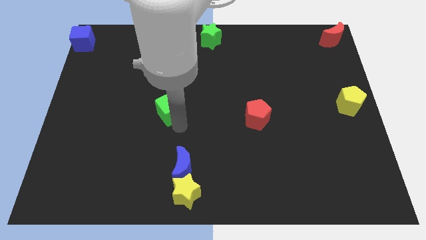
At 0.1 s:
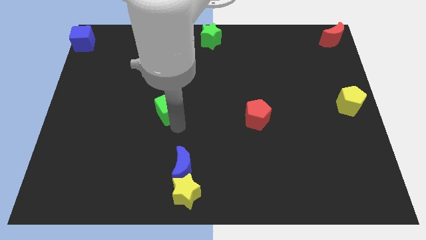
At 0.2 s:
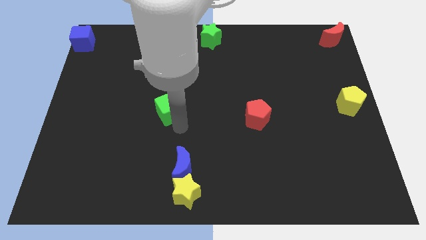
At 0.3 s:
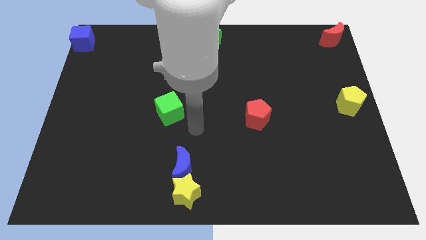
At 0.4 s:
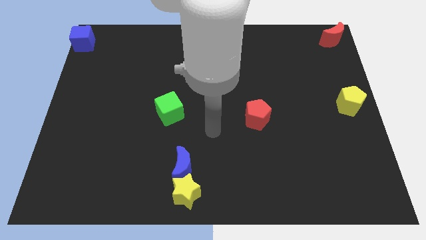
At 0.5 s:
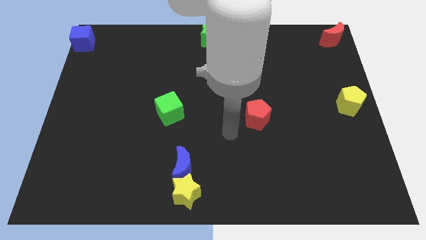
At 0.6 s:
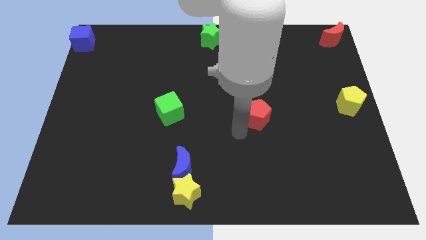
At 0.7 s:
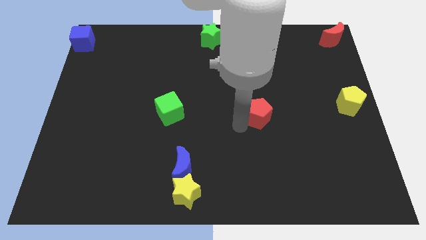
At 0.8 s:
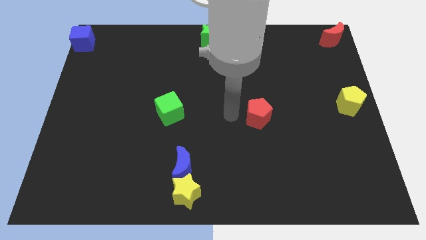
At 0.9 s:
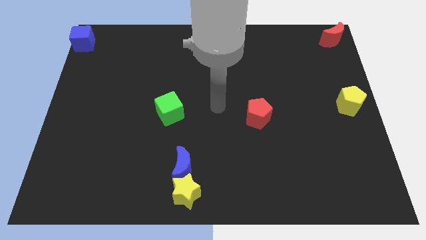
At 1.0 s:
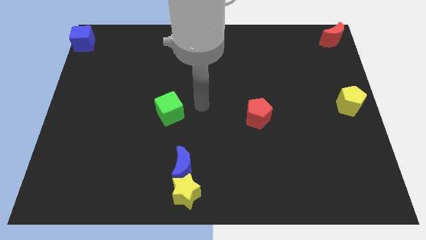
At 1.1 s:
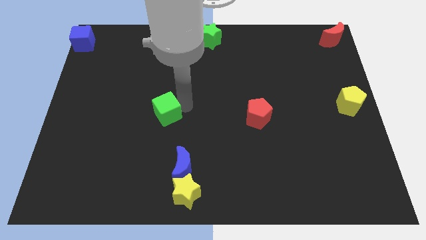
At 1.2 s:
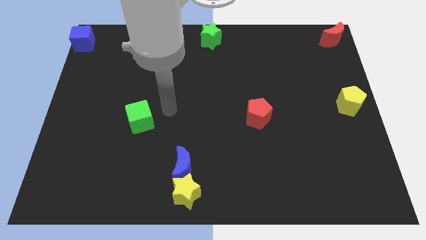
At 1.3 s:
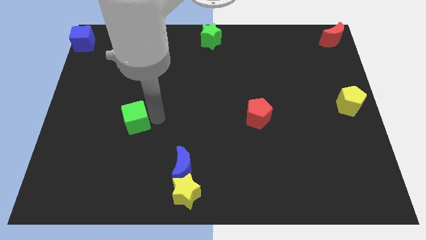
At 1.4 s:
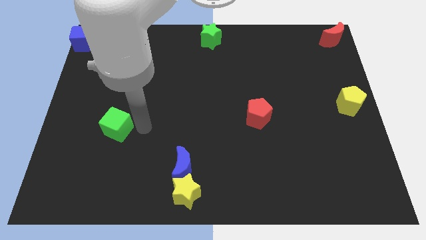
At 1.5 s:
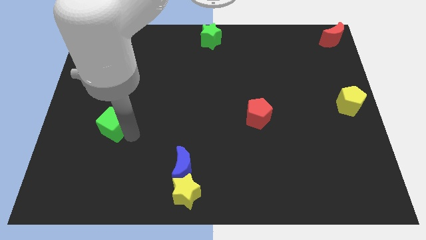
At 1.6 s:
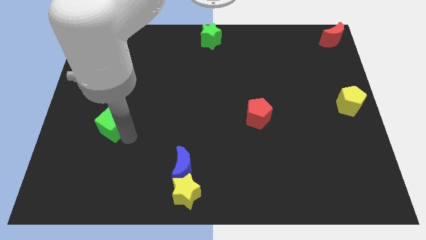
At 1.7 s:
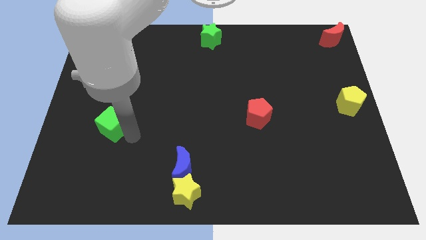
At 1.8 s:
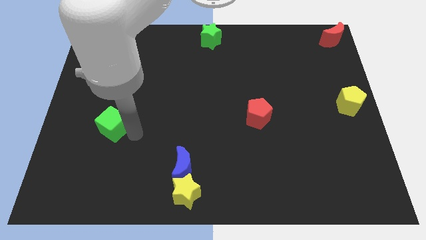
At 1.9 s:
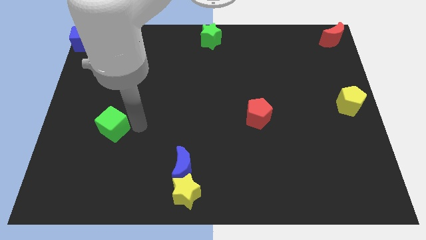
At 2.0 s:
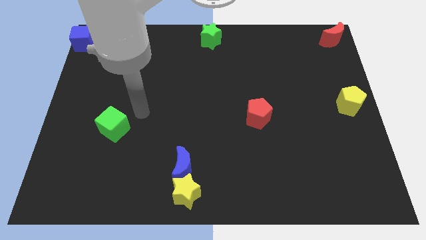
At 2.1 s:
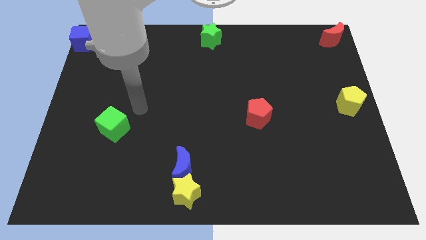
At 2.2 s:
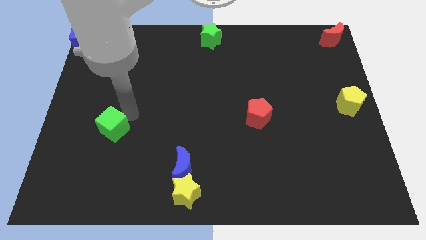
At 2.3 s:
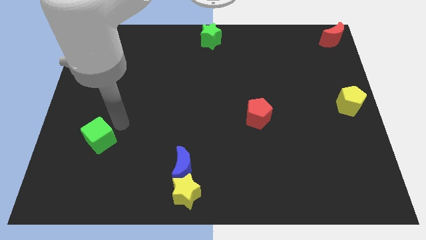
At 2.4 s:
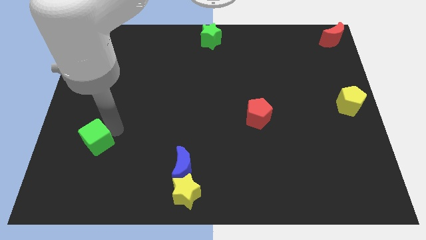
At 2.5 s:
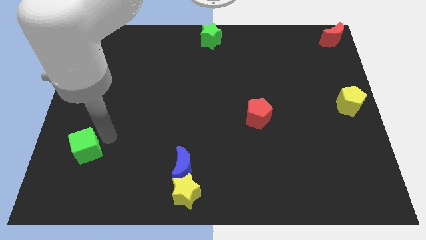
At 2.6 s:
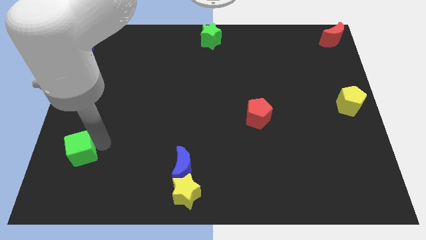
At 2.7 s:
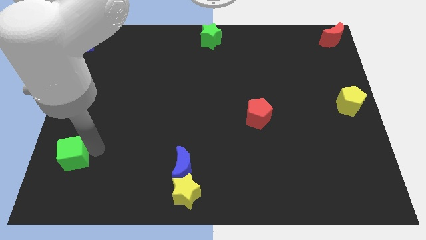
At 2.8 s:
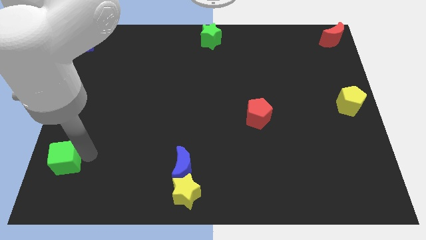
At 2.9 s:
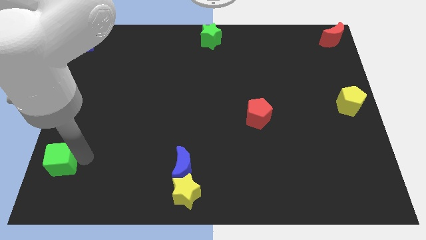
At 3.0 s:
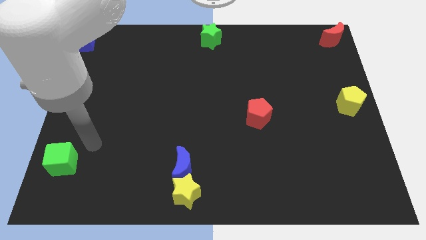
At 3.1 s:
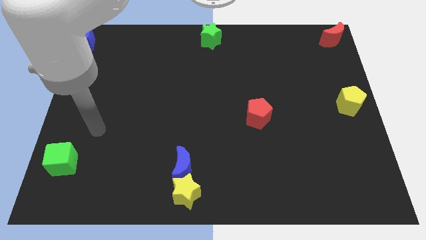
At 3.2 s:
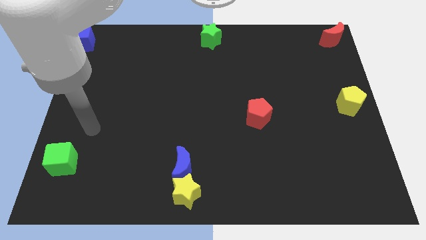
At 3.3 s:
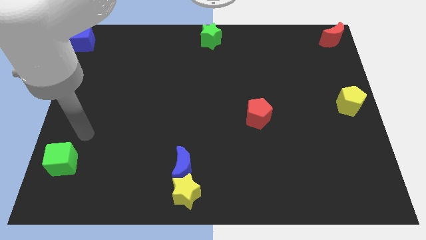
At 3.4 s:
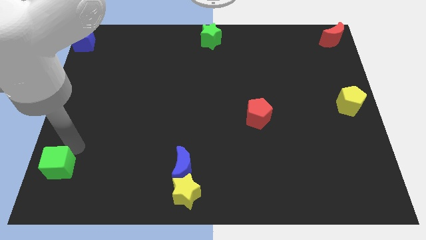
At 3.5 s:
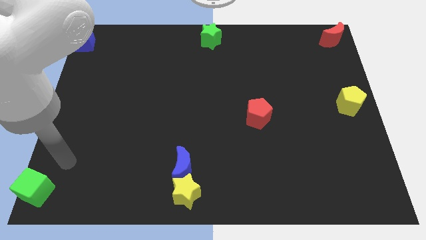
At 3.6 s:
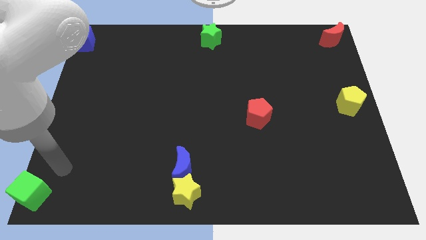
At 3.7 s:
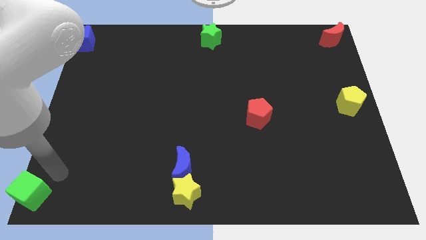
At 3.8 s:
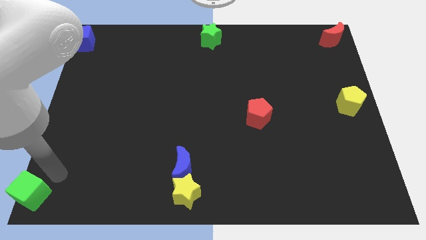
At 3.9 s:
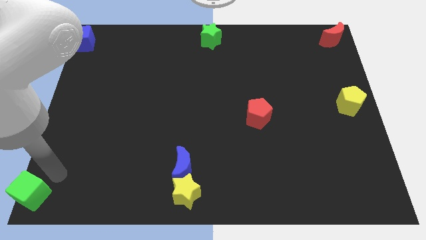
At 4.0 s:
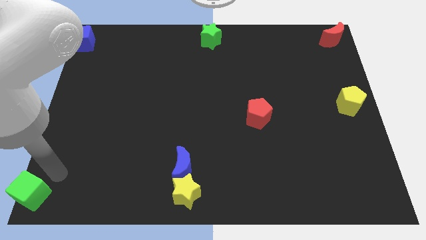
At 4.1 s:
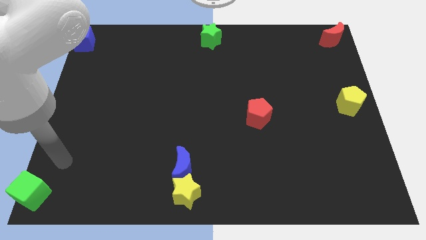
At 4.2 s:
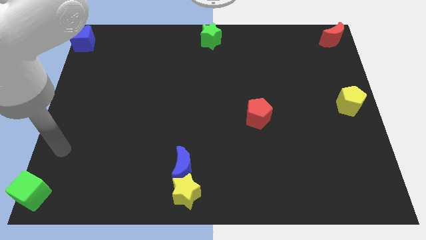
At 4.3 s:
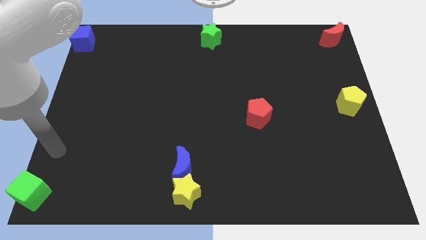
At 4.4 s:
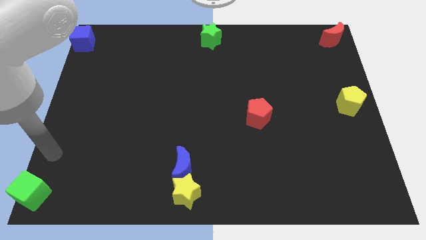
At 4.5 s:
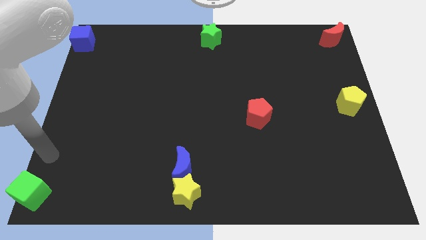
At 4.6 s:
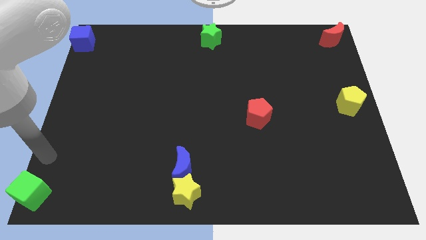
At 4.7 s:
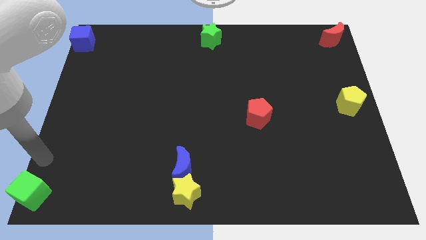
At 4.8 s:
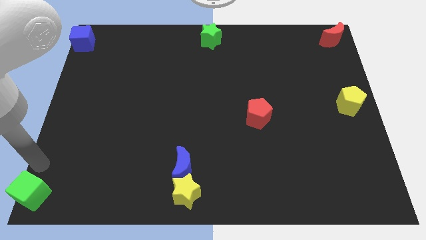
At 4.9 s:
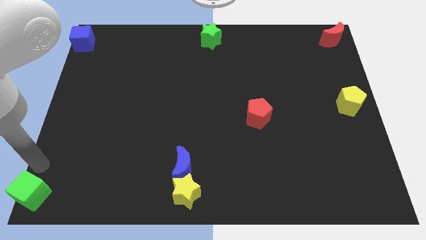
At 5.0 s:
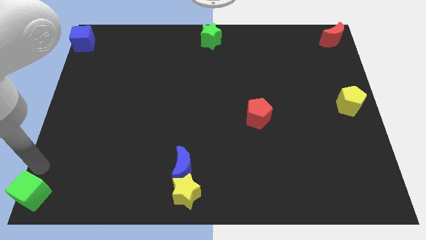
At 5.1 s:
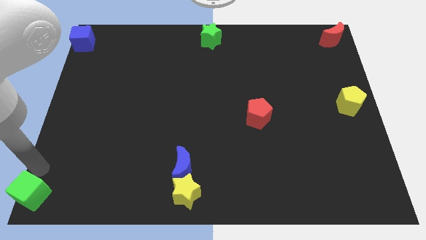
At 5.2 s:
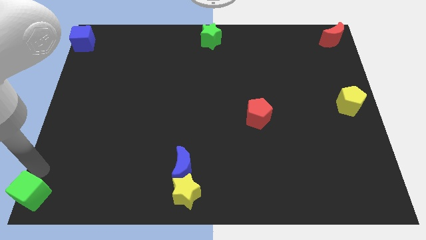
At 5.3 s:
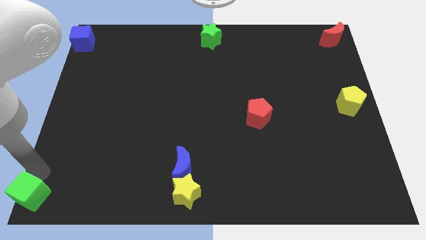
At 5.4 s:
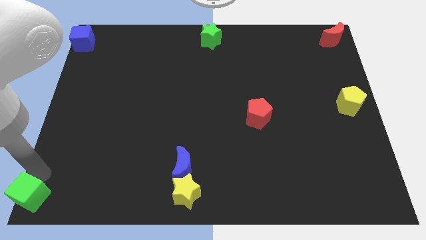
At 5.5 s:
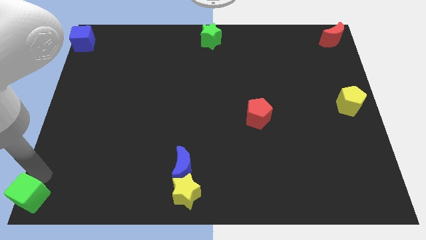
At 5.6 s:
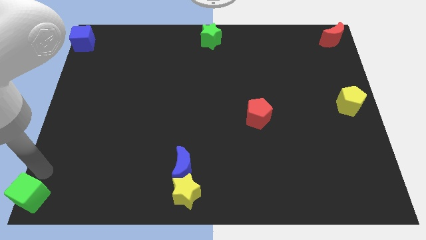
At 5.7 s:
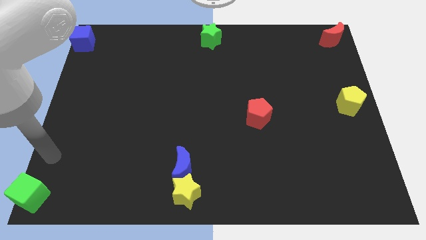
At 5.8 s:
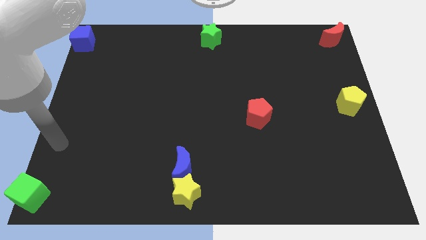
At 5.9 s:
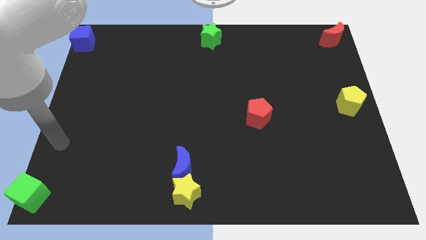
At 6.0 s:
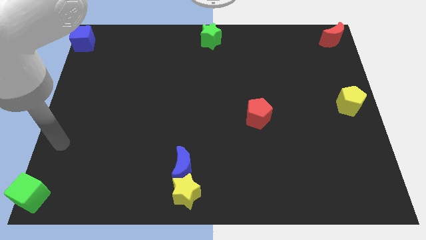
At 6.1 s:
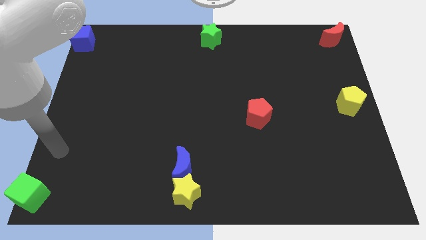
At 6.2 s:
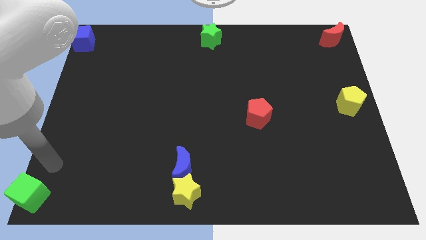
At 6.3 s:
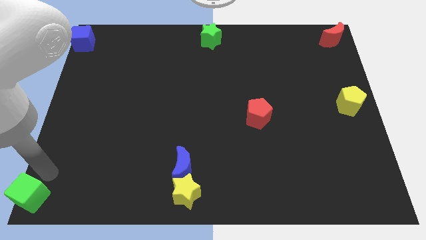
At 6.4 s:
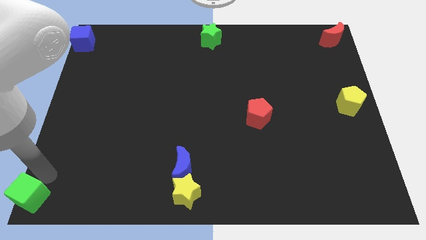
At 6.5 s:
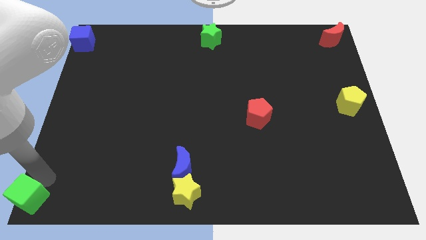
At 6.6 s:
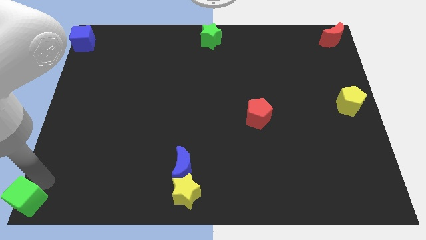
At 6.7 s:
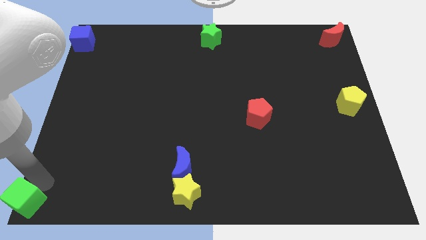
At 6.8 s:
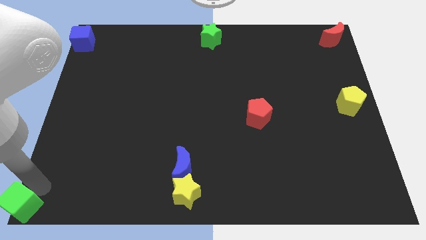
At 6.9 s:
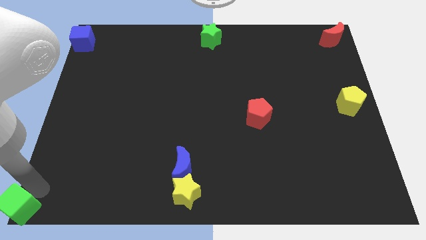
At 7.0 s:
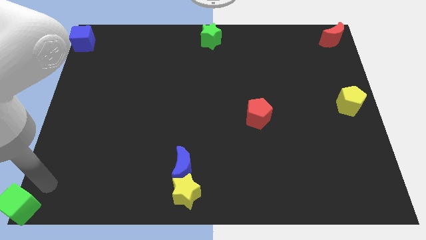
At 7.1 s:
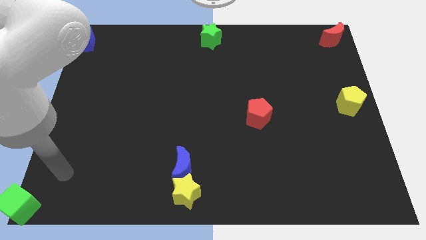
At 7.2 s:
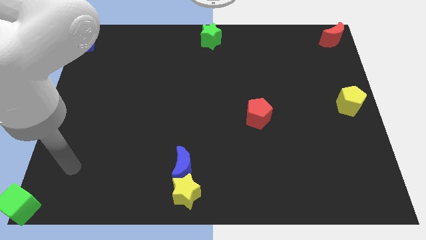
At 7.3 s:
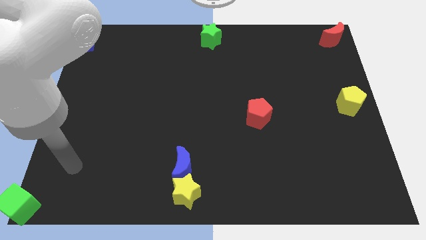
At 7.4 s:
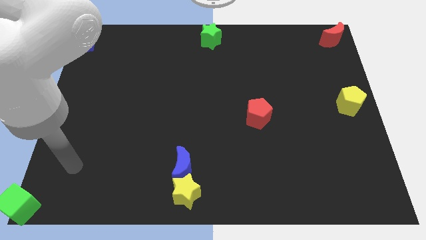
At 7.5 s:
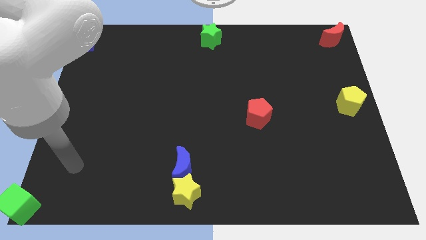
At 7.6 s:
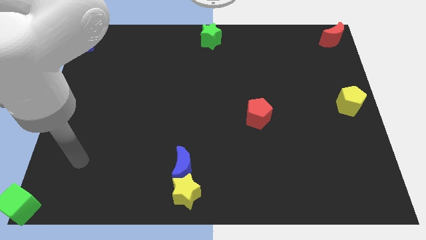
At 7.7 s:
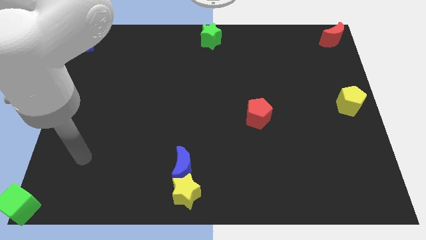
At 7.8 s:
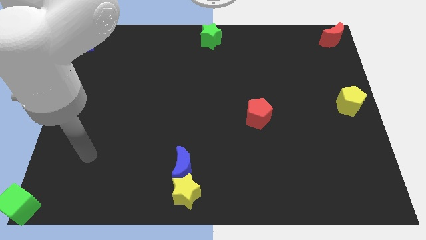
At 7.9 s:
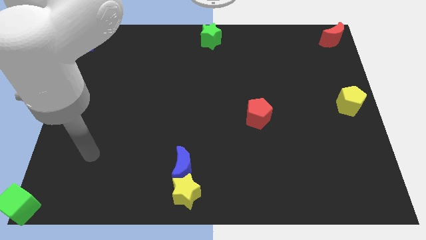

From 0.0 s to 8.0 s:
move the green cube to the bottom left corner of the board

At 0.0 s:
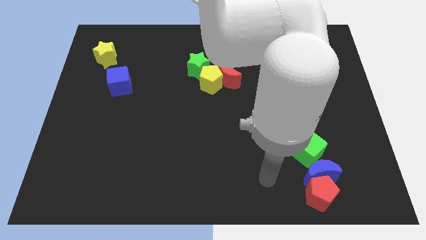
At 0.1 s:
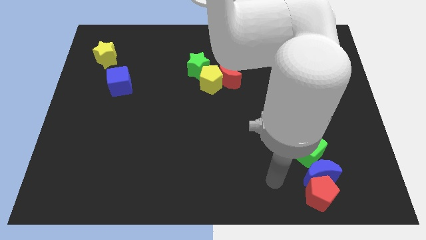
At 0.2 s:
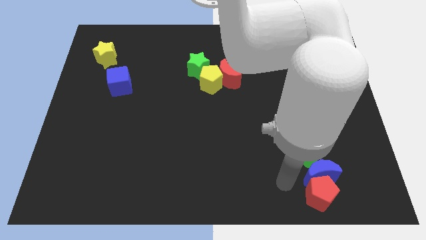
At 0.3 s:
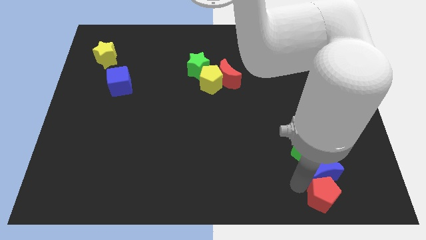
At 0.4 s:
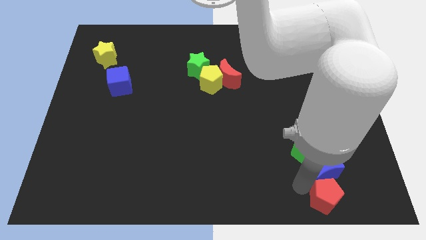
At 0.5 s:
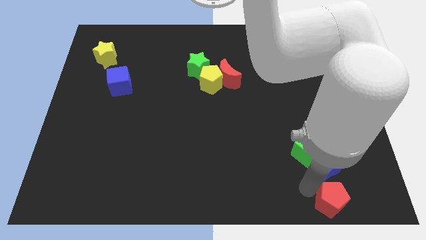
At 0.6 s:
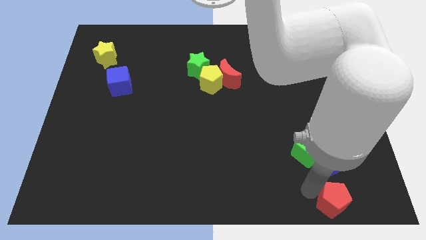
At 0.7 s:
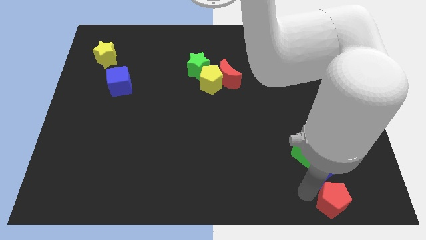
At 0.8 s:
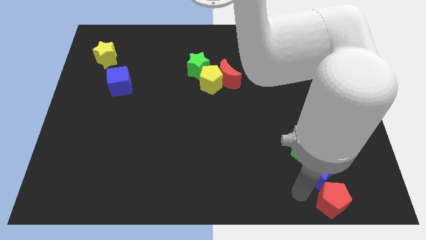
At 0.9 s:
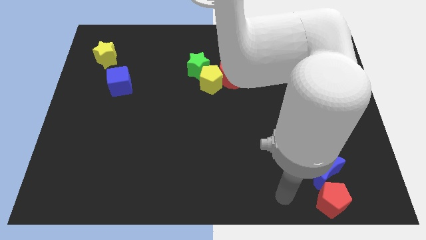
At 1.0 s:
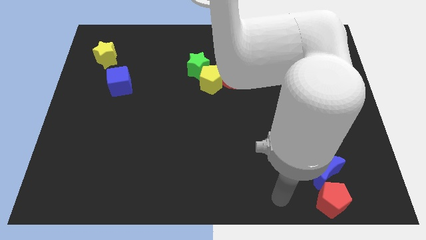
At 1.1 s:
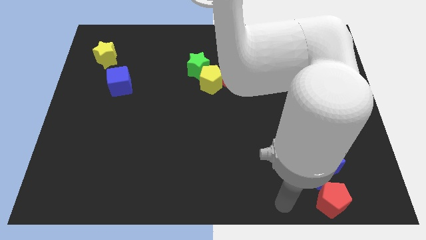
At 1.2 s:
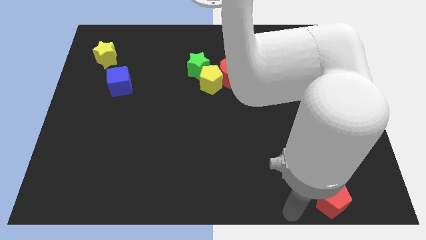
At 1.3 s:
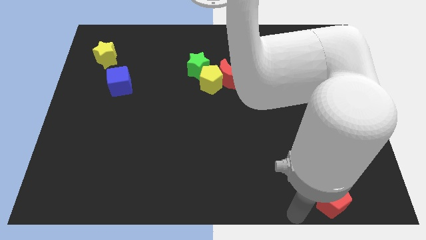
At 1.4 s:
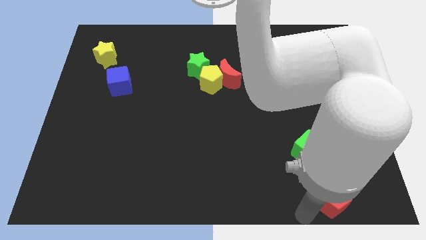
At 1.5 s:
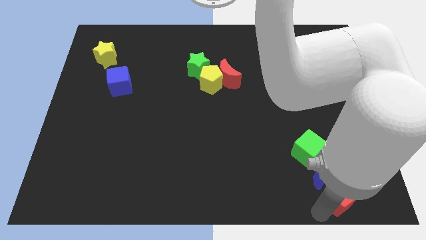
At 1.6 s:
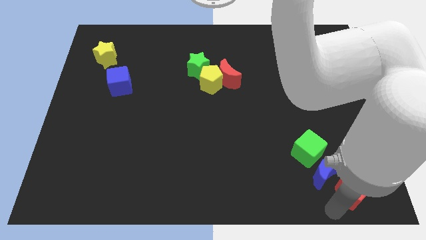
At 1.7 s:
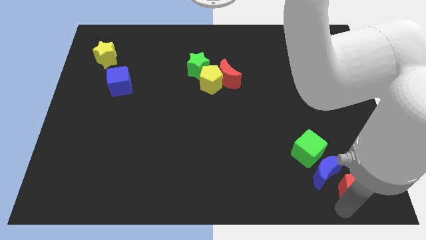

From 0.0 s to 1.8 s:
slightly push the red pentagon to the right
